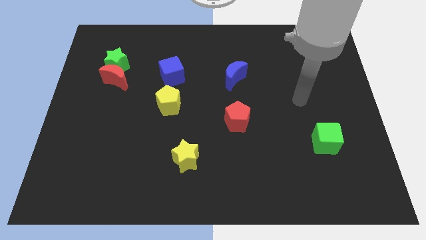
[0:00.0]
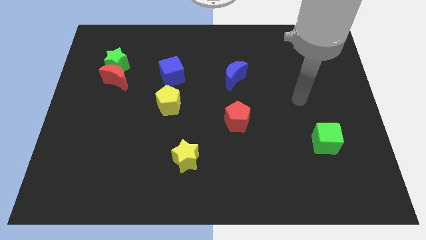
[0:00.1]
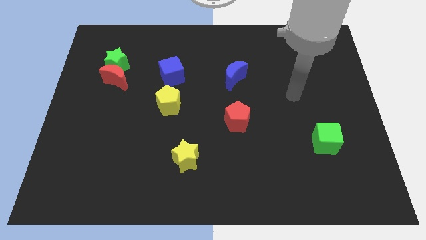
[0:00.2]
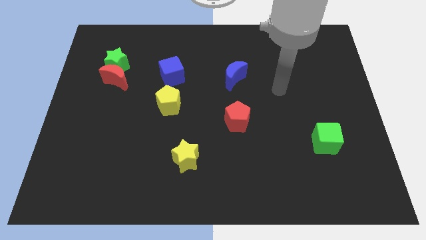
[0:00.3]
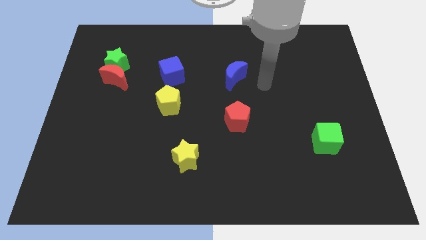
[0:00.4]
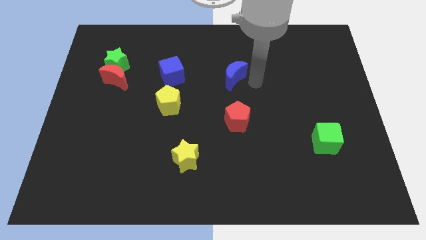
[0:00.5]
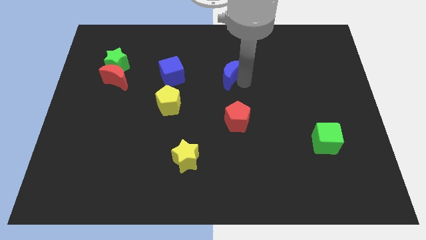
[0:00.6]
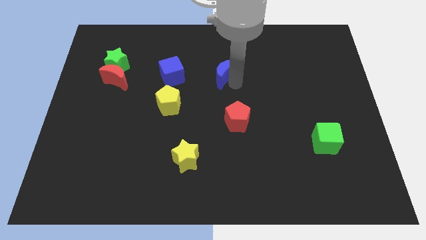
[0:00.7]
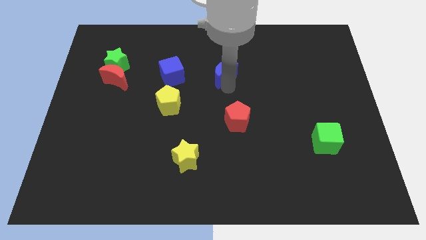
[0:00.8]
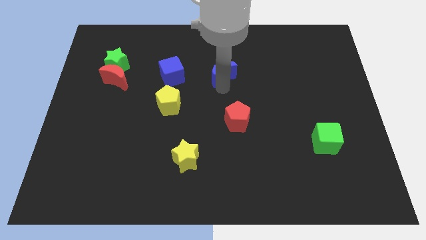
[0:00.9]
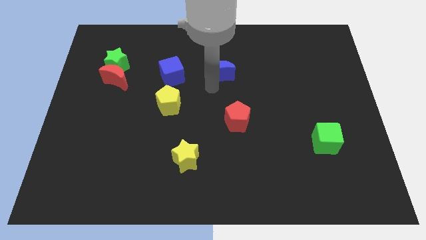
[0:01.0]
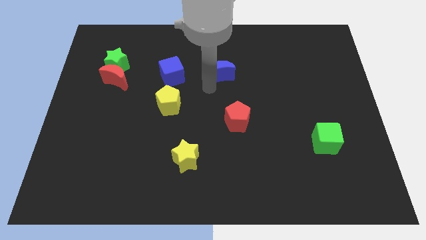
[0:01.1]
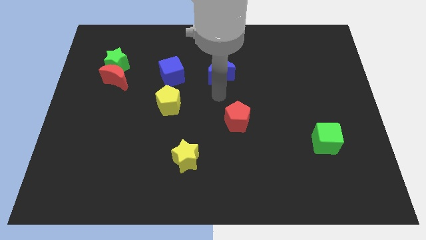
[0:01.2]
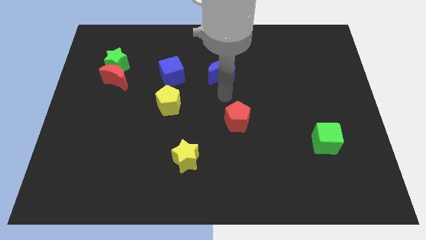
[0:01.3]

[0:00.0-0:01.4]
move the blue moon slightly to the left

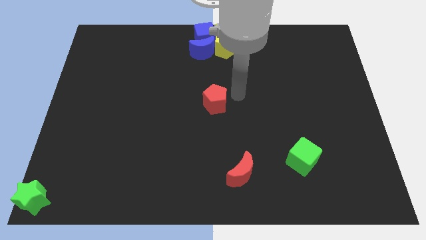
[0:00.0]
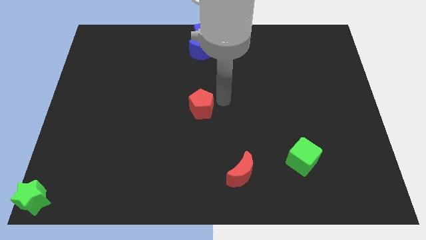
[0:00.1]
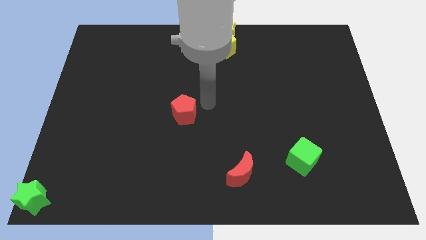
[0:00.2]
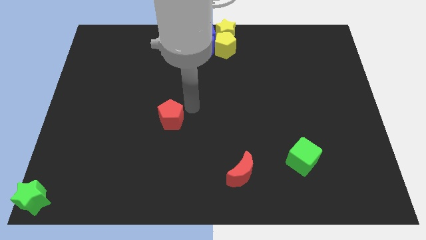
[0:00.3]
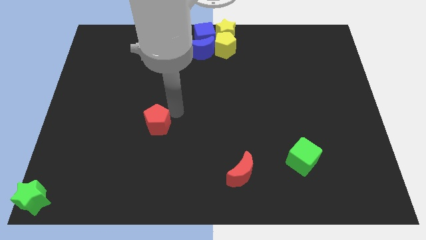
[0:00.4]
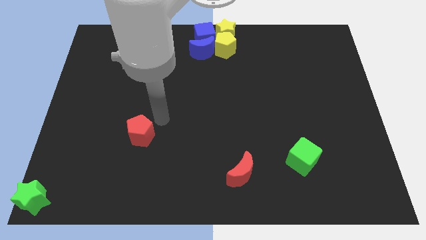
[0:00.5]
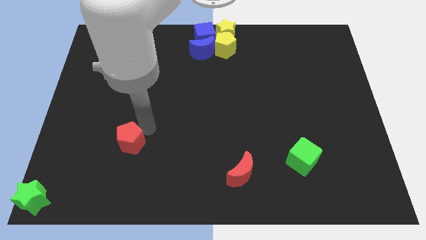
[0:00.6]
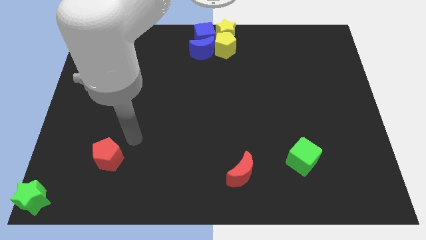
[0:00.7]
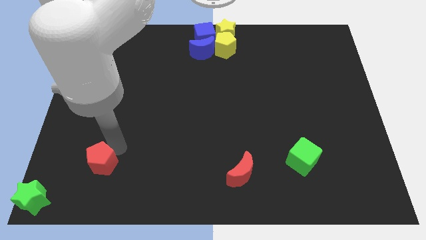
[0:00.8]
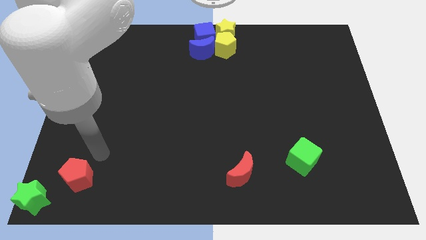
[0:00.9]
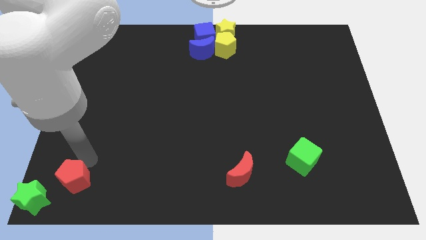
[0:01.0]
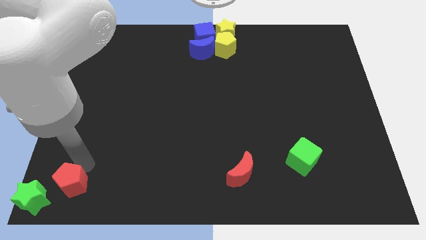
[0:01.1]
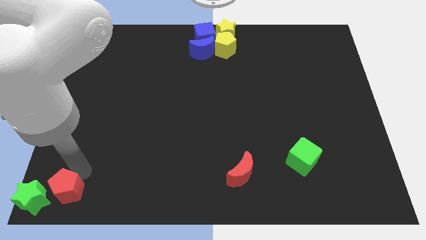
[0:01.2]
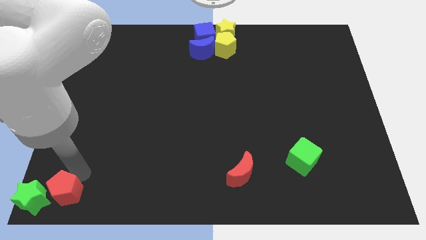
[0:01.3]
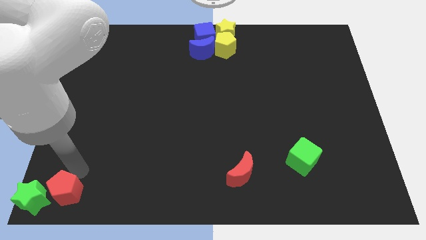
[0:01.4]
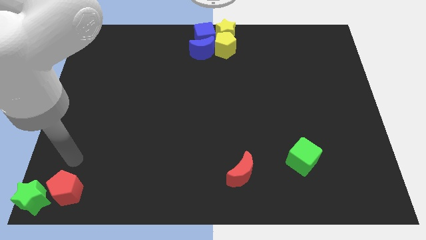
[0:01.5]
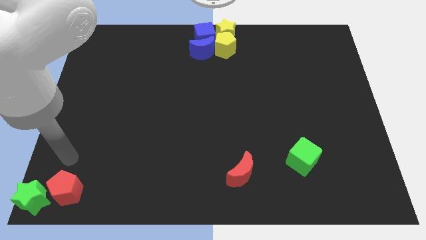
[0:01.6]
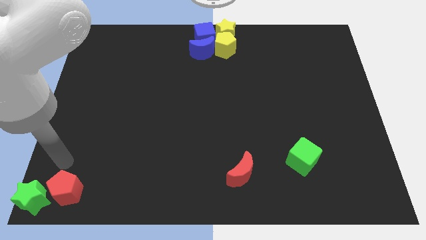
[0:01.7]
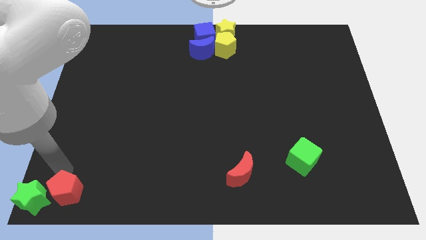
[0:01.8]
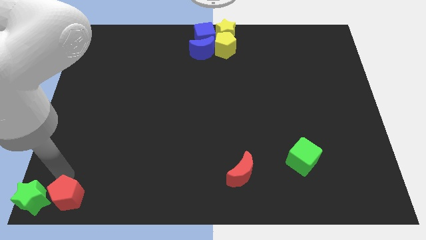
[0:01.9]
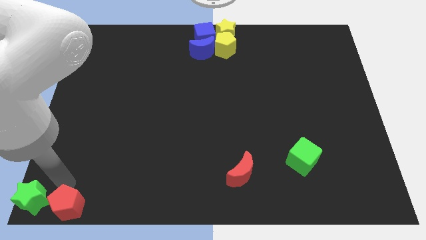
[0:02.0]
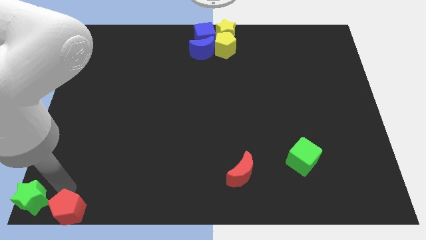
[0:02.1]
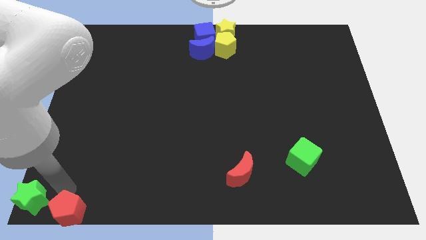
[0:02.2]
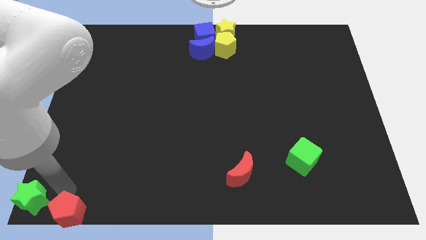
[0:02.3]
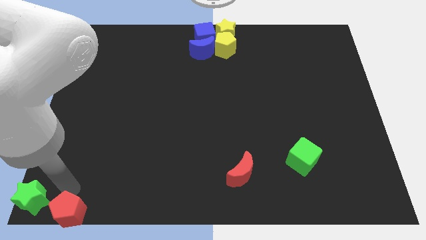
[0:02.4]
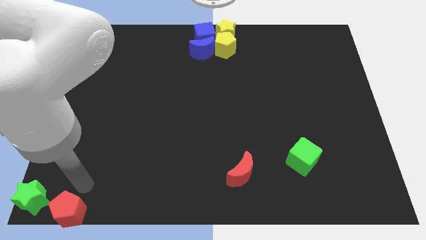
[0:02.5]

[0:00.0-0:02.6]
move the red pentagon to the right side of the green star

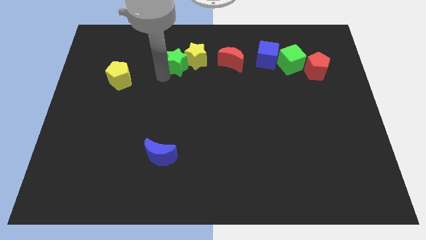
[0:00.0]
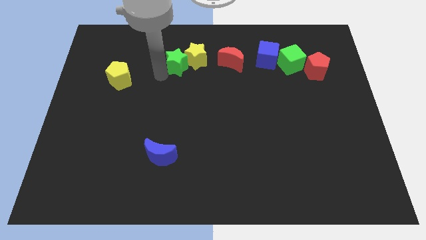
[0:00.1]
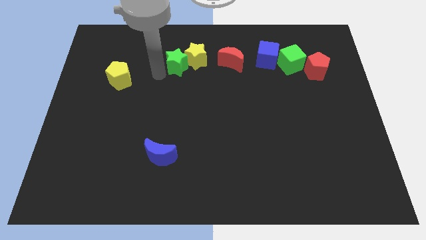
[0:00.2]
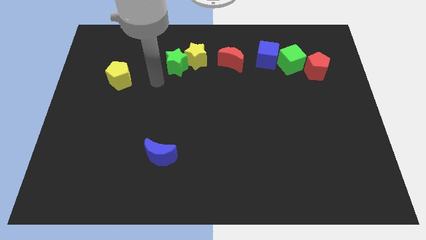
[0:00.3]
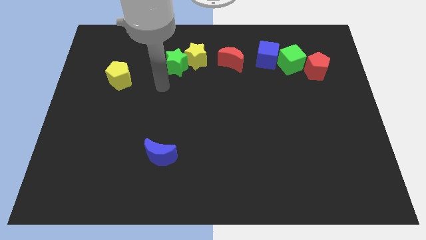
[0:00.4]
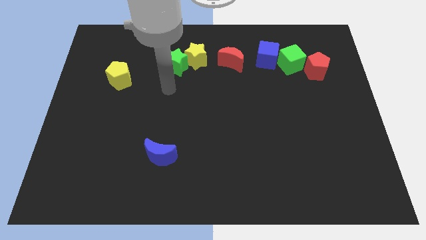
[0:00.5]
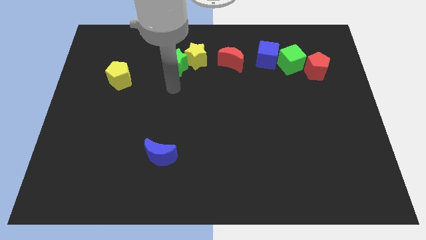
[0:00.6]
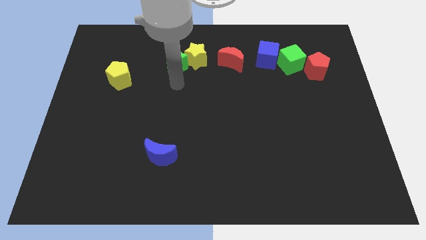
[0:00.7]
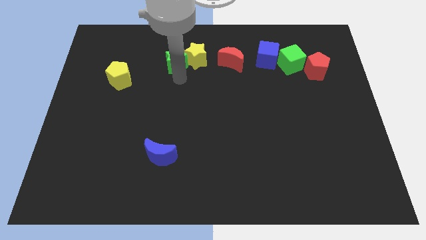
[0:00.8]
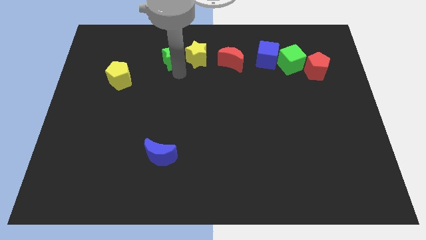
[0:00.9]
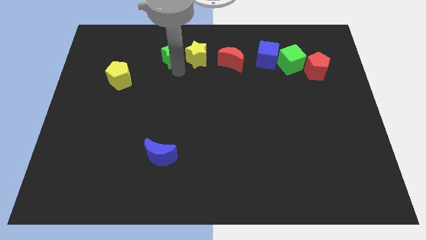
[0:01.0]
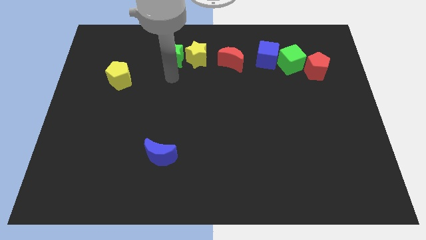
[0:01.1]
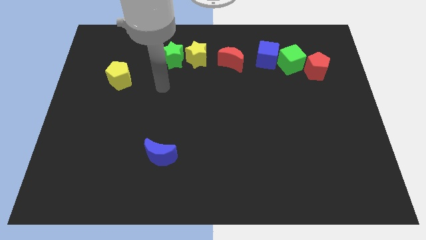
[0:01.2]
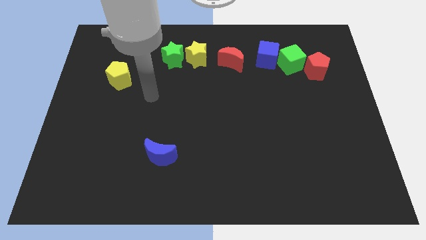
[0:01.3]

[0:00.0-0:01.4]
move the green star to the left of the yellow star

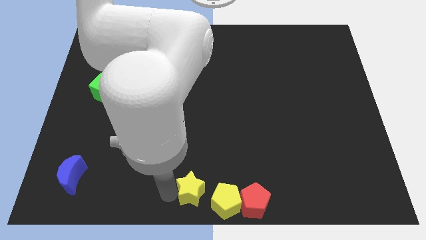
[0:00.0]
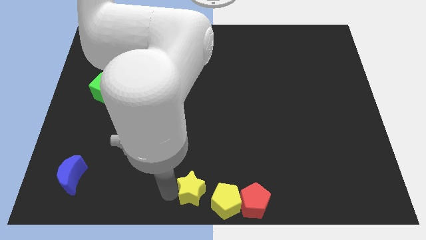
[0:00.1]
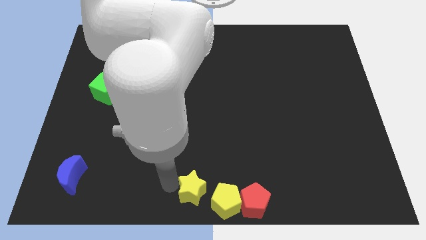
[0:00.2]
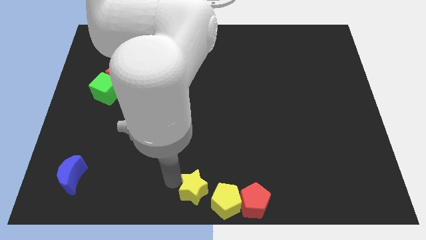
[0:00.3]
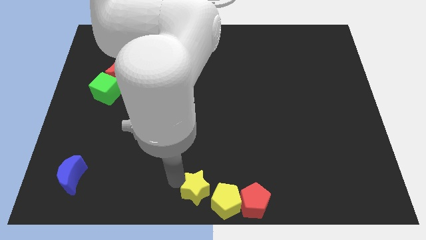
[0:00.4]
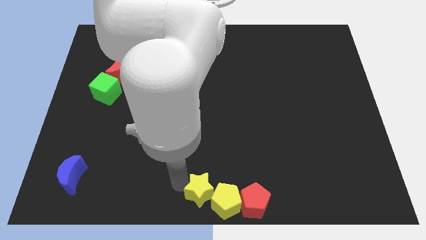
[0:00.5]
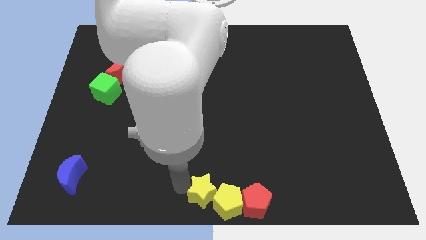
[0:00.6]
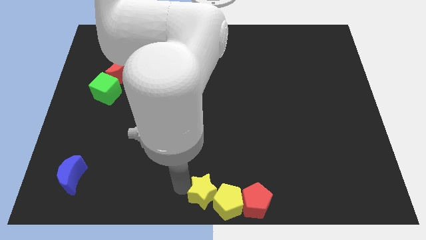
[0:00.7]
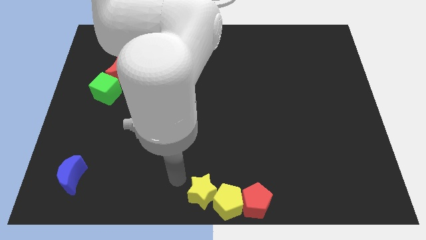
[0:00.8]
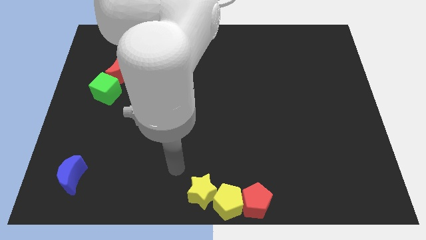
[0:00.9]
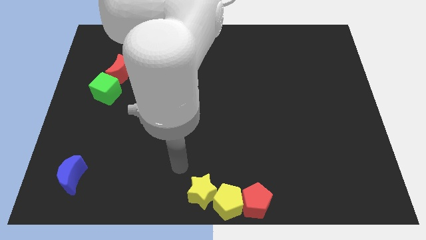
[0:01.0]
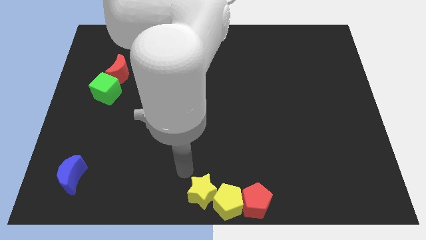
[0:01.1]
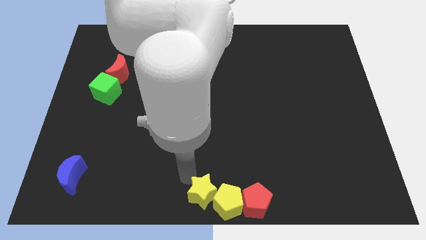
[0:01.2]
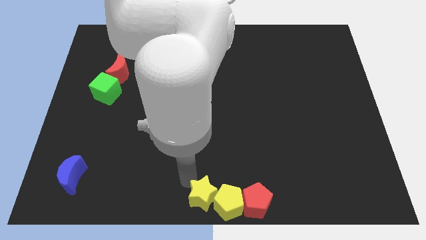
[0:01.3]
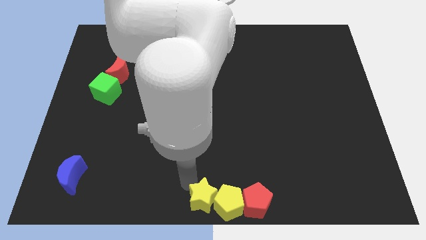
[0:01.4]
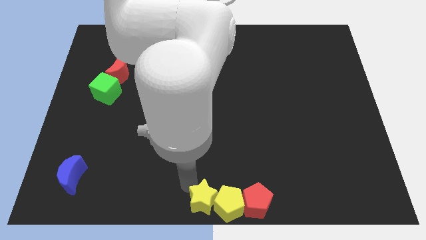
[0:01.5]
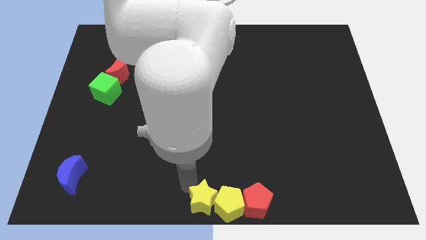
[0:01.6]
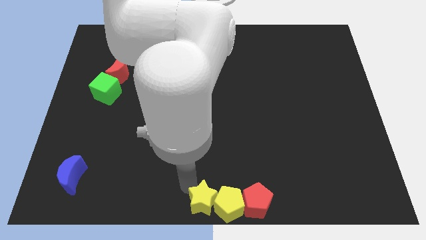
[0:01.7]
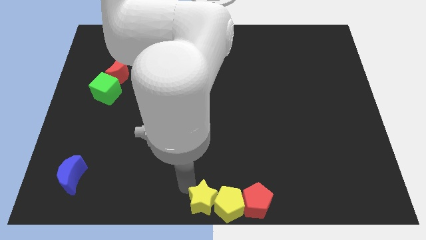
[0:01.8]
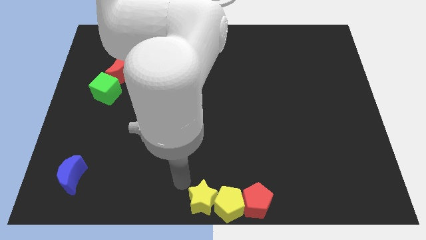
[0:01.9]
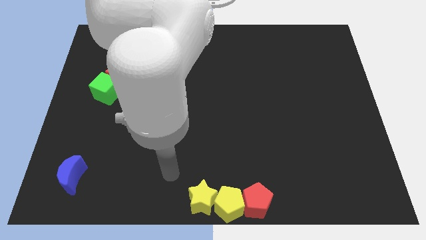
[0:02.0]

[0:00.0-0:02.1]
move the yellow star into the yellow pentagon

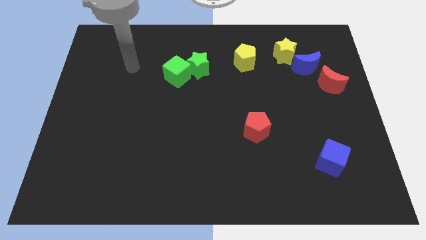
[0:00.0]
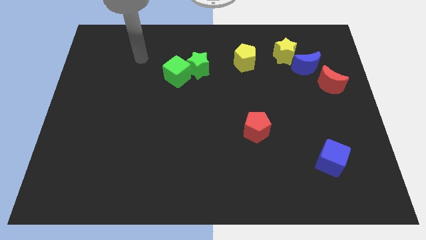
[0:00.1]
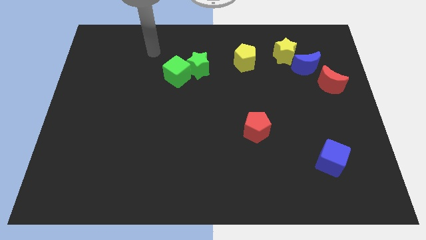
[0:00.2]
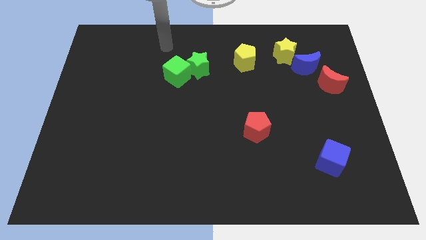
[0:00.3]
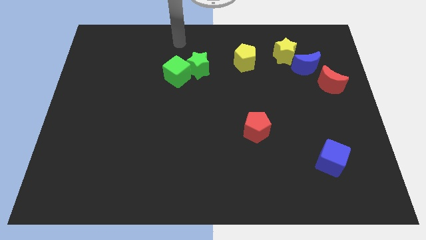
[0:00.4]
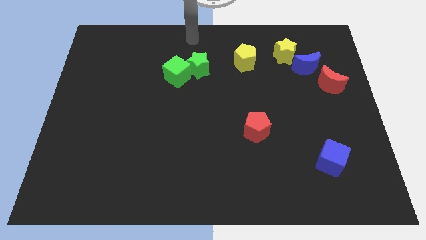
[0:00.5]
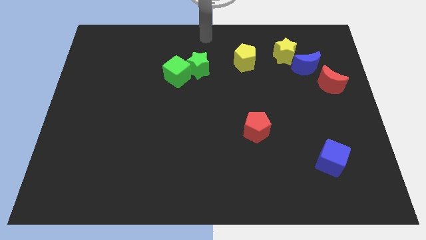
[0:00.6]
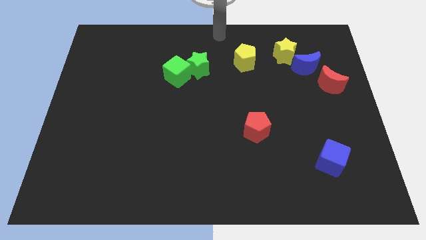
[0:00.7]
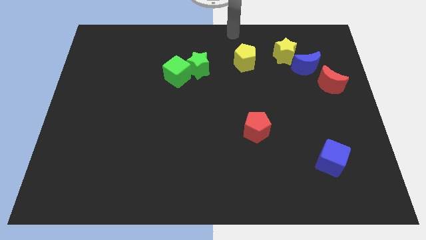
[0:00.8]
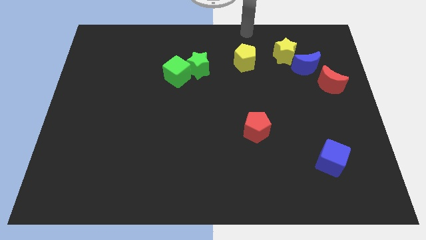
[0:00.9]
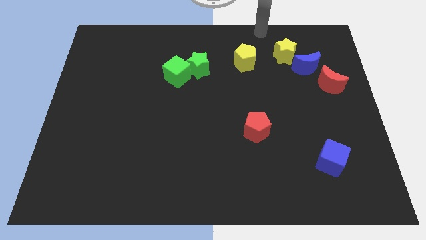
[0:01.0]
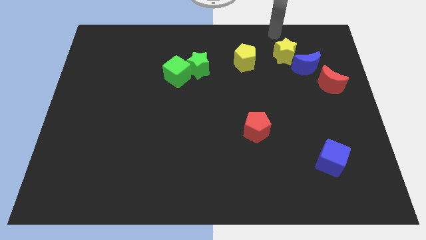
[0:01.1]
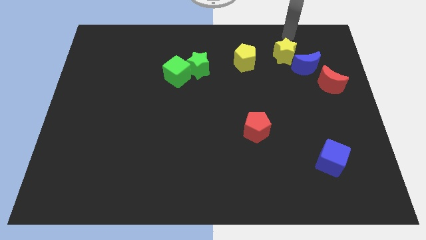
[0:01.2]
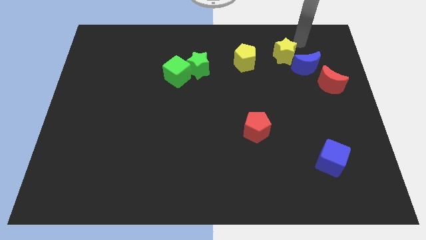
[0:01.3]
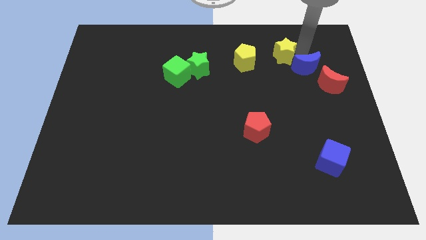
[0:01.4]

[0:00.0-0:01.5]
point your arm to the top of the blue crescent
